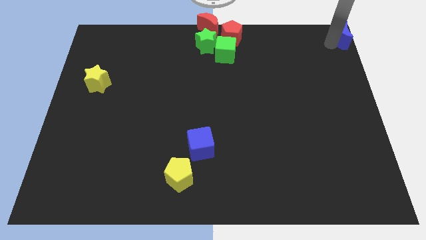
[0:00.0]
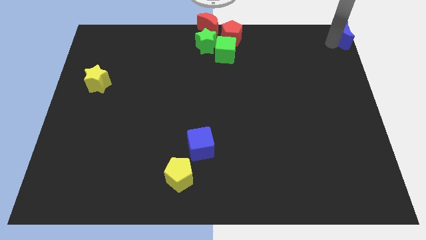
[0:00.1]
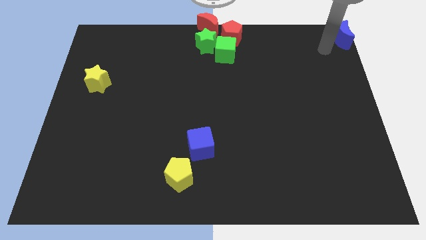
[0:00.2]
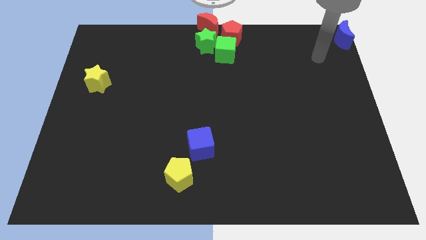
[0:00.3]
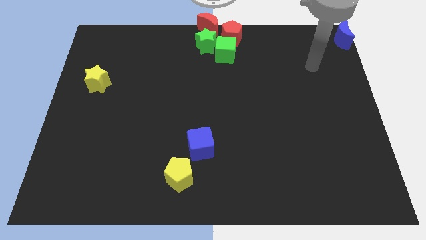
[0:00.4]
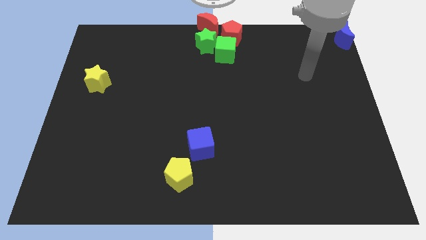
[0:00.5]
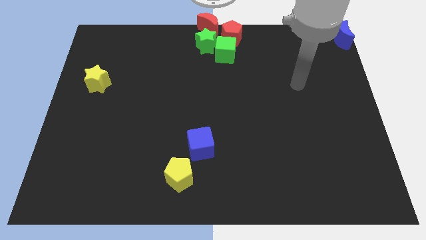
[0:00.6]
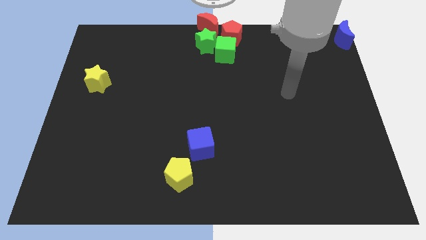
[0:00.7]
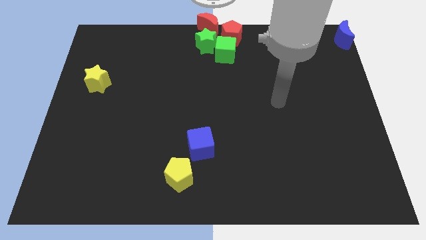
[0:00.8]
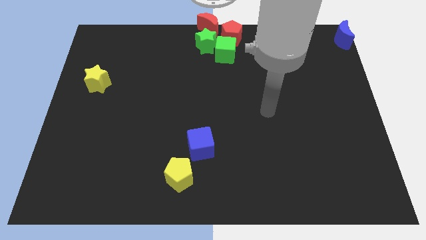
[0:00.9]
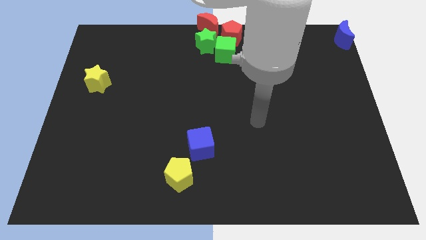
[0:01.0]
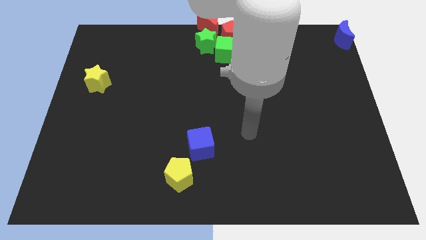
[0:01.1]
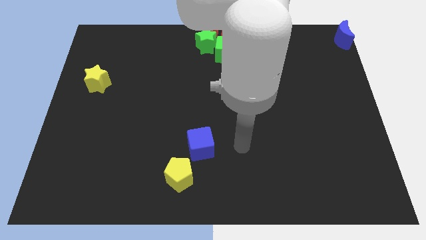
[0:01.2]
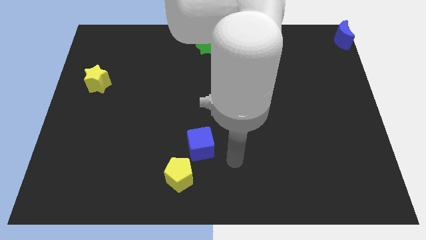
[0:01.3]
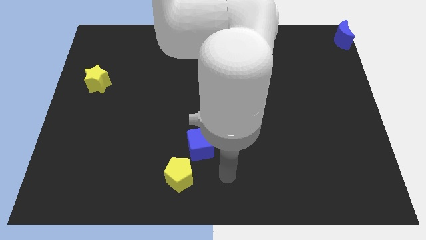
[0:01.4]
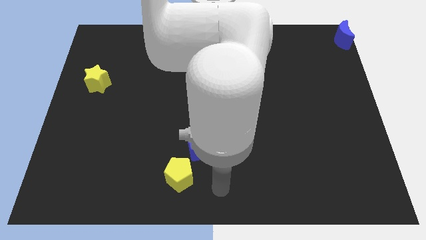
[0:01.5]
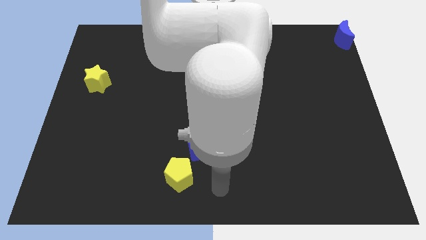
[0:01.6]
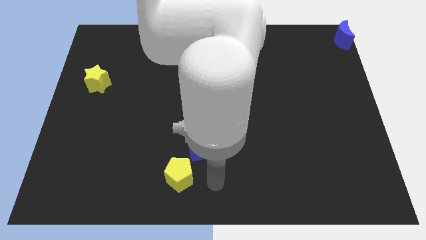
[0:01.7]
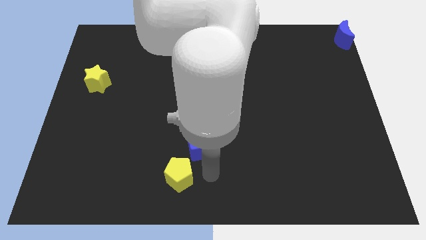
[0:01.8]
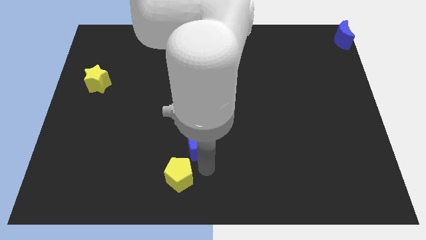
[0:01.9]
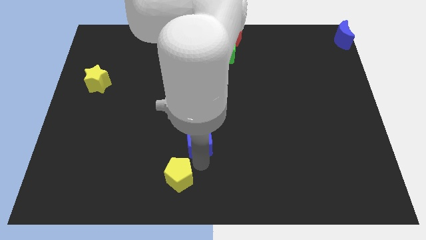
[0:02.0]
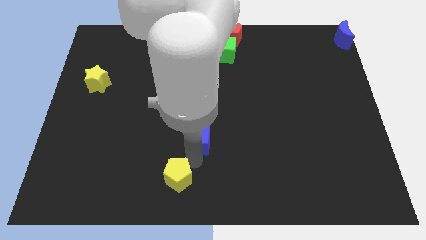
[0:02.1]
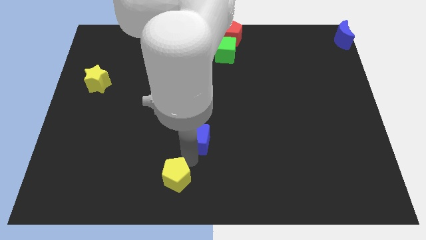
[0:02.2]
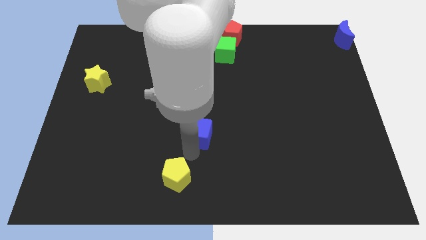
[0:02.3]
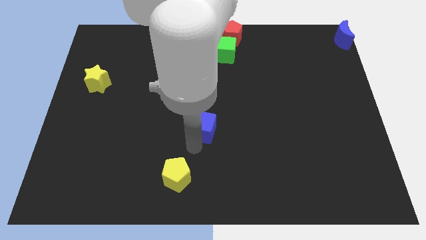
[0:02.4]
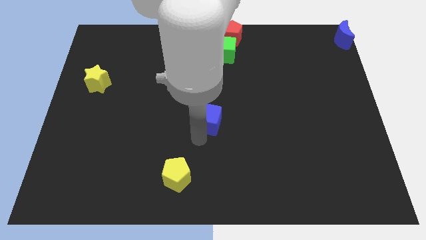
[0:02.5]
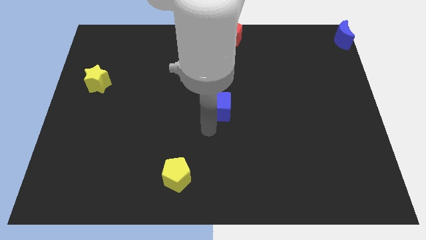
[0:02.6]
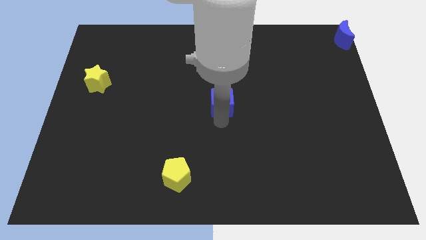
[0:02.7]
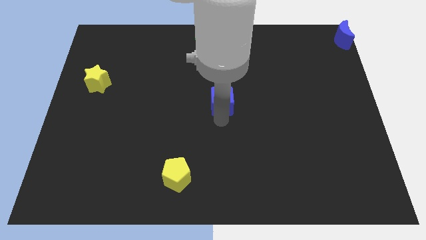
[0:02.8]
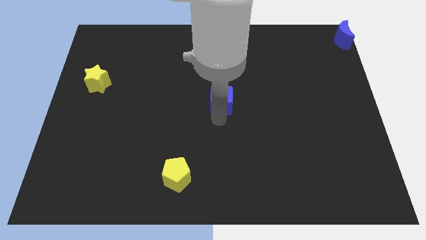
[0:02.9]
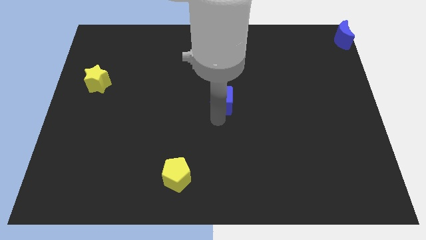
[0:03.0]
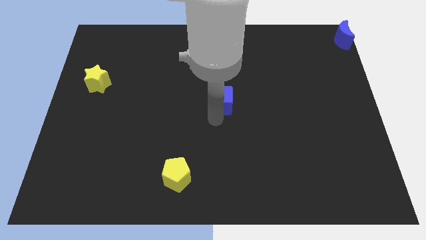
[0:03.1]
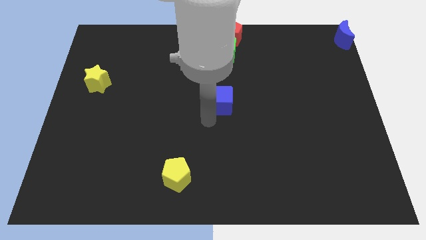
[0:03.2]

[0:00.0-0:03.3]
move the blue cube to the center of the board

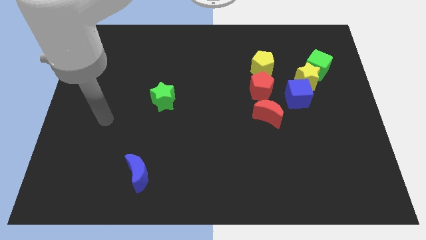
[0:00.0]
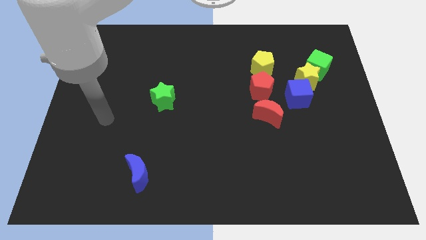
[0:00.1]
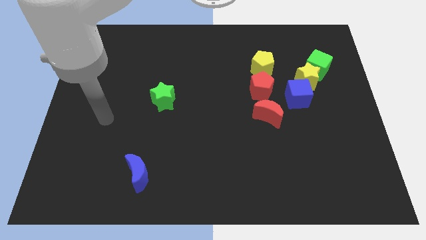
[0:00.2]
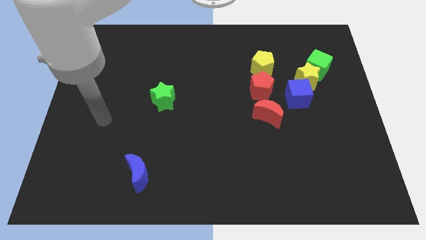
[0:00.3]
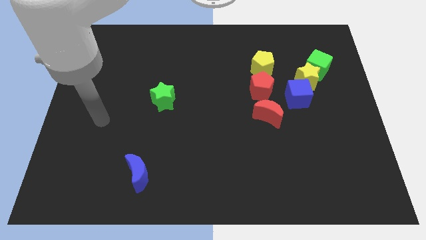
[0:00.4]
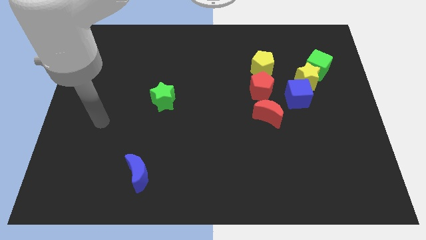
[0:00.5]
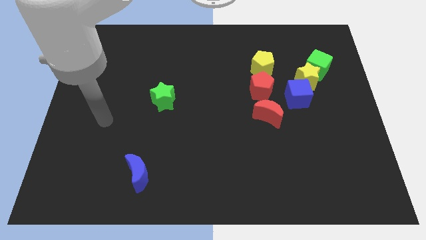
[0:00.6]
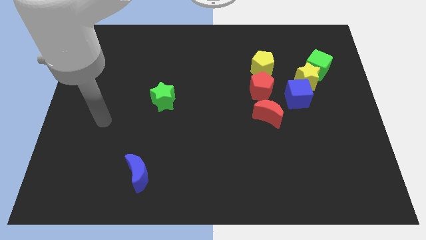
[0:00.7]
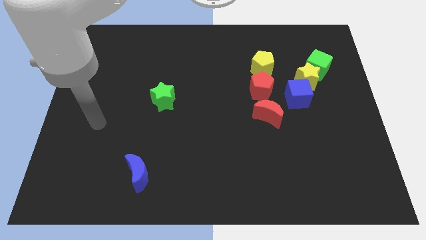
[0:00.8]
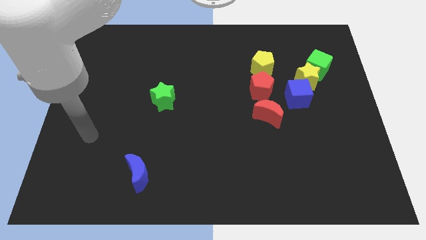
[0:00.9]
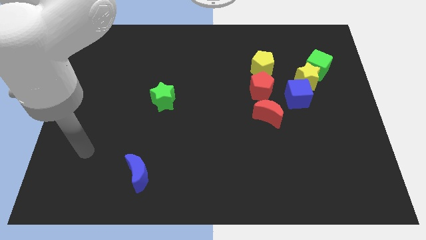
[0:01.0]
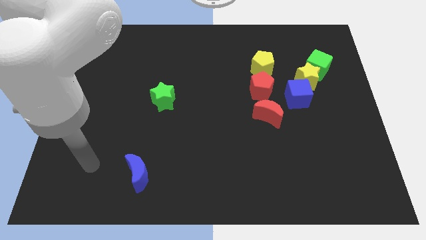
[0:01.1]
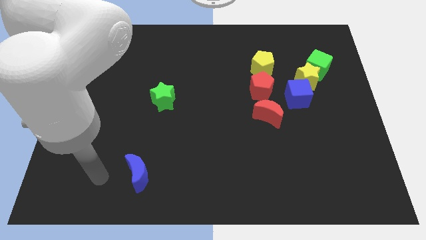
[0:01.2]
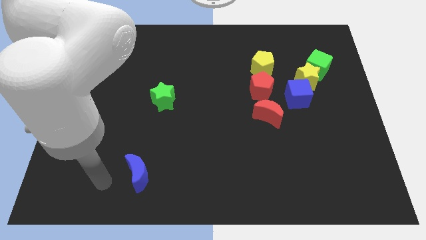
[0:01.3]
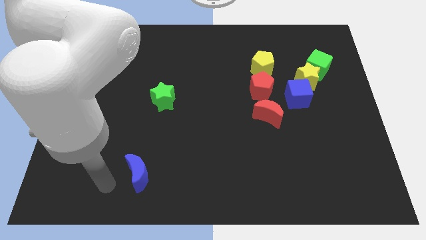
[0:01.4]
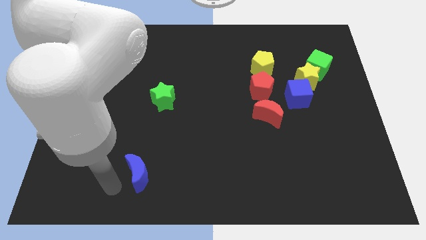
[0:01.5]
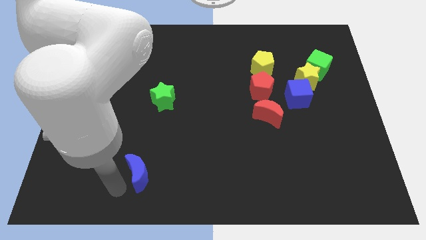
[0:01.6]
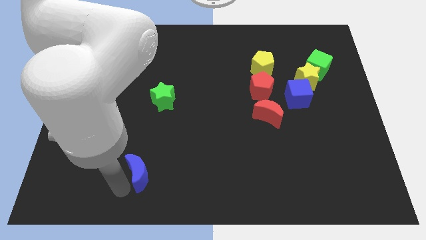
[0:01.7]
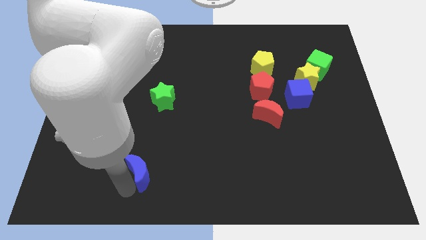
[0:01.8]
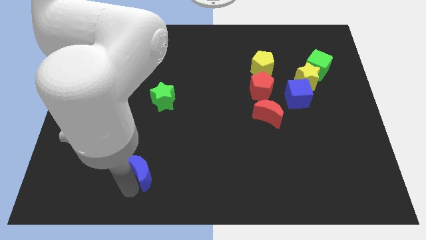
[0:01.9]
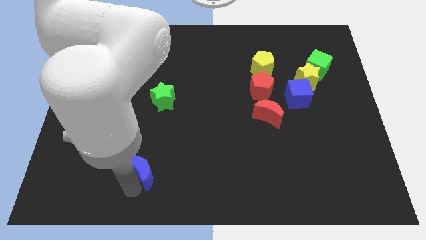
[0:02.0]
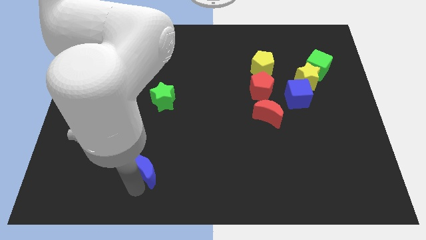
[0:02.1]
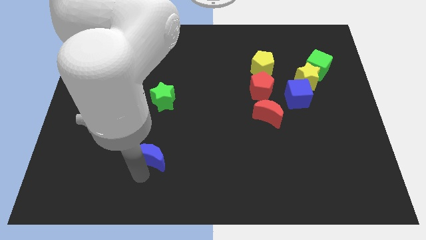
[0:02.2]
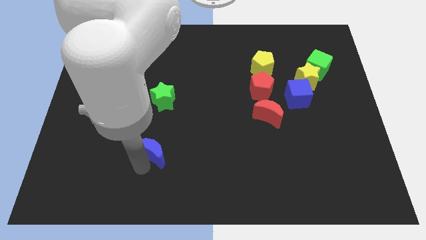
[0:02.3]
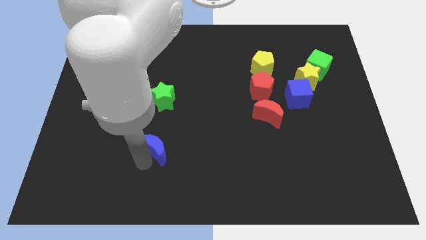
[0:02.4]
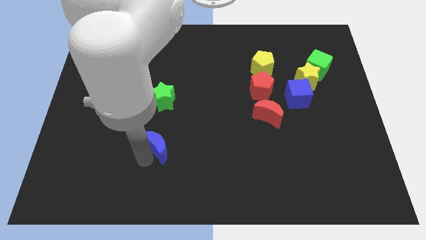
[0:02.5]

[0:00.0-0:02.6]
move your arm and slightly push the blue moon below the green star

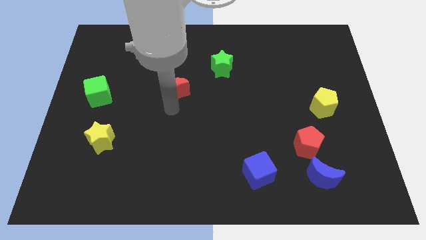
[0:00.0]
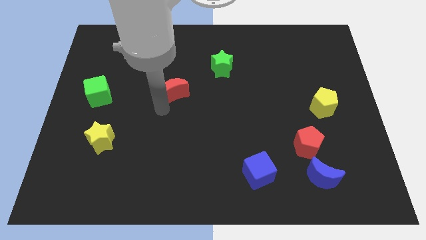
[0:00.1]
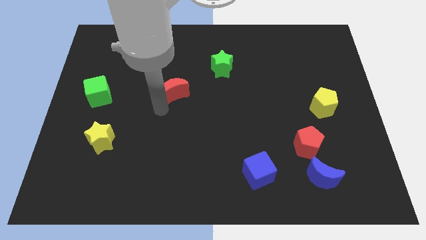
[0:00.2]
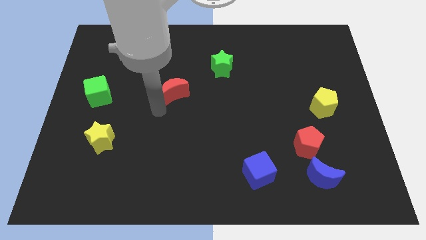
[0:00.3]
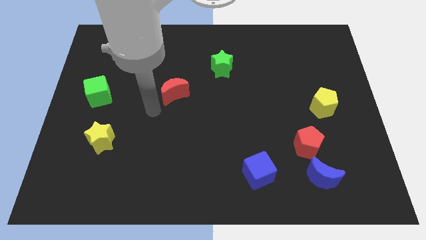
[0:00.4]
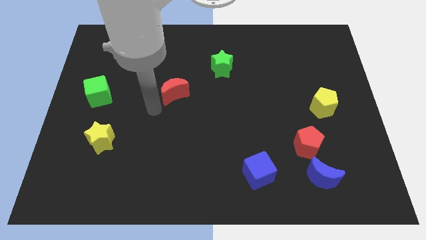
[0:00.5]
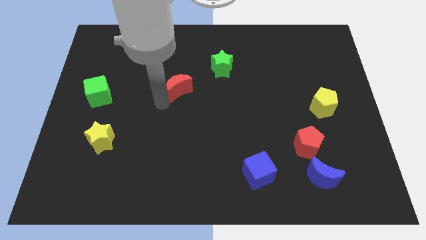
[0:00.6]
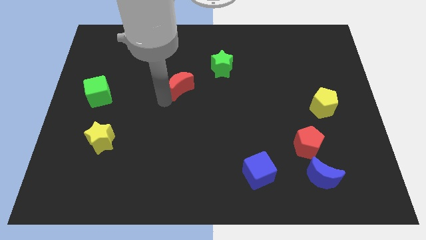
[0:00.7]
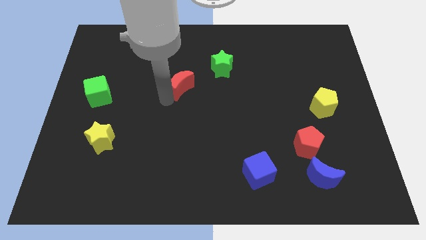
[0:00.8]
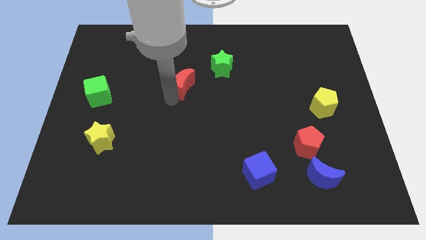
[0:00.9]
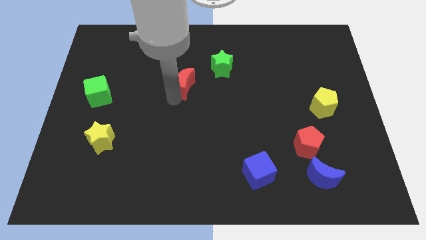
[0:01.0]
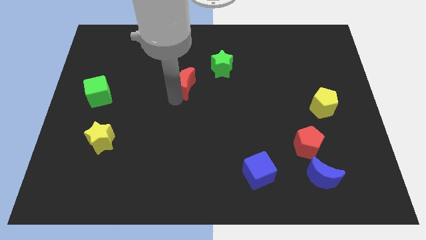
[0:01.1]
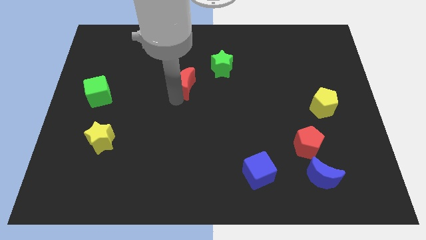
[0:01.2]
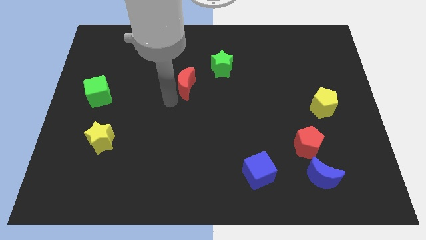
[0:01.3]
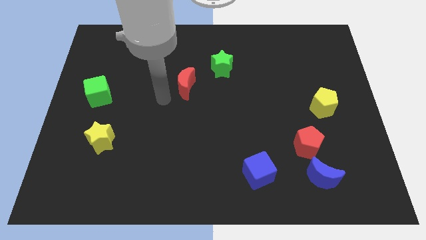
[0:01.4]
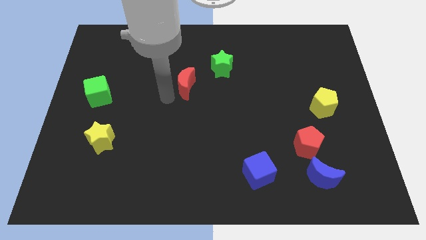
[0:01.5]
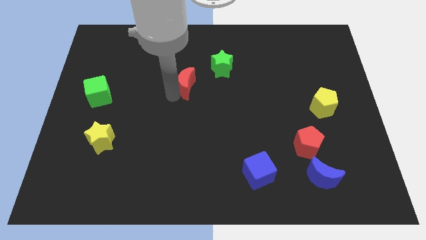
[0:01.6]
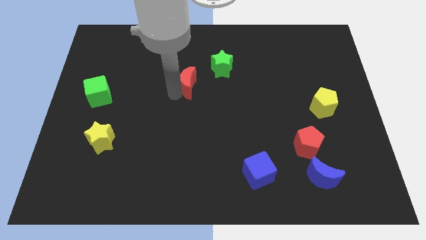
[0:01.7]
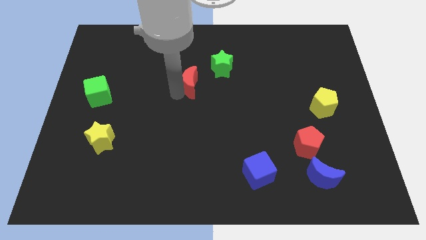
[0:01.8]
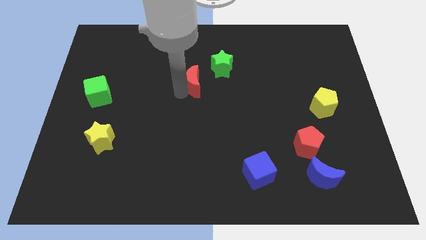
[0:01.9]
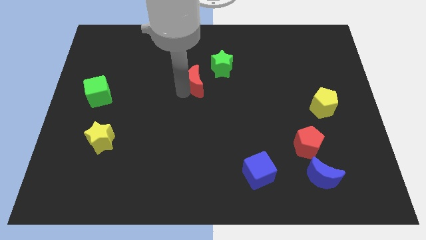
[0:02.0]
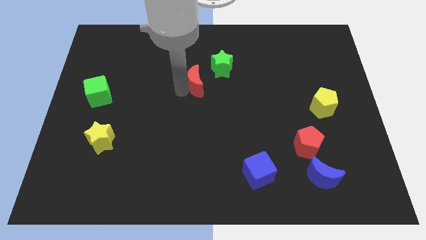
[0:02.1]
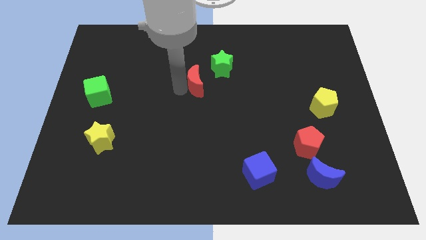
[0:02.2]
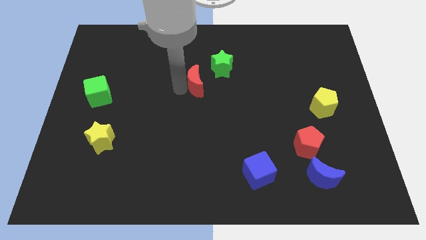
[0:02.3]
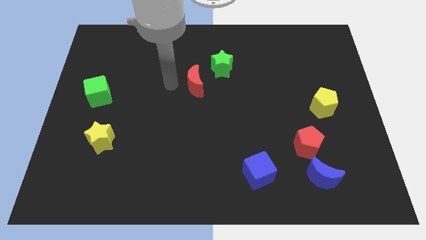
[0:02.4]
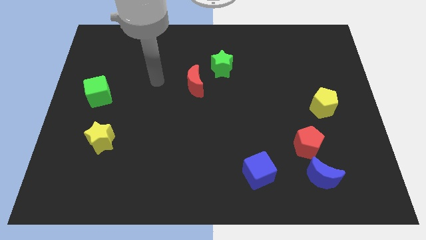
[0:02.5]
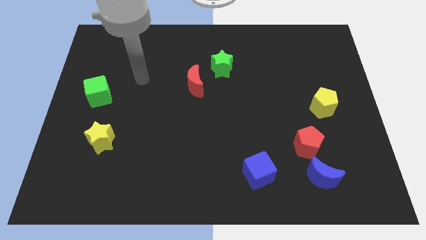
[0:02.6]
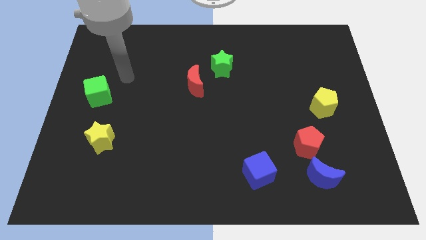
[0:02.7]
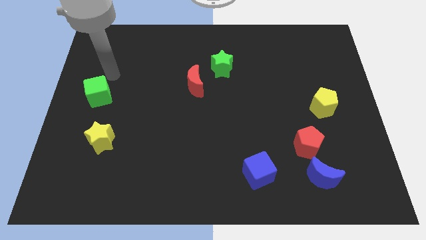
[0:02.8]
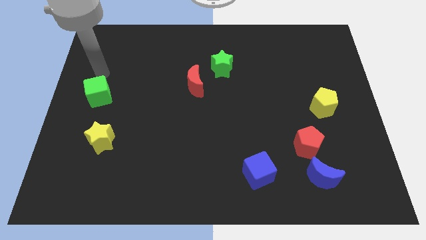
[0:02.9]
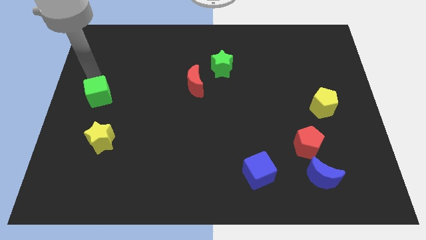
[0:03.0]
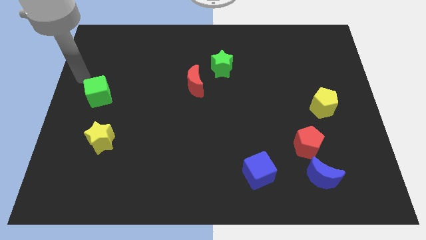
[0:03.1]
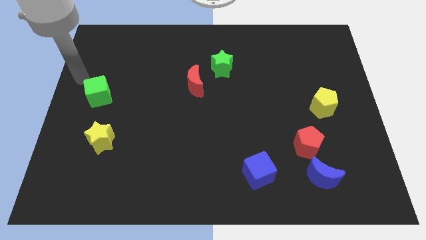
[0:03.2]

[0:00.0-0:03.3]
place the red crescent to the bottom left of the green star
